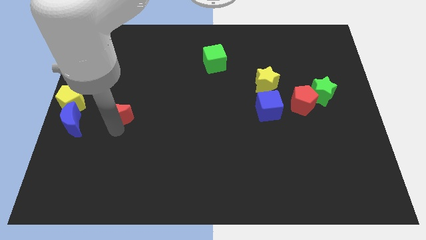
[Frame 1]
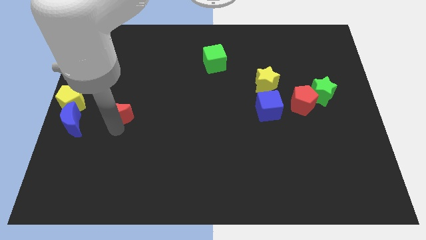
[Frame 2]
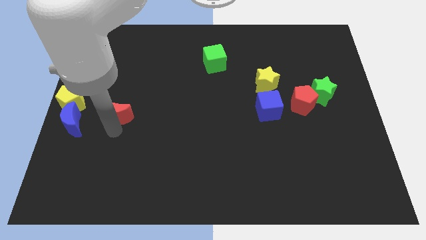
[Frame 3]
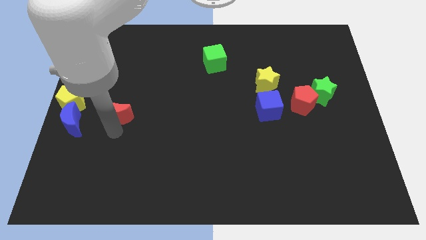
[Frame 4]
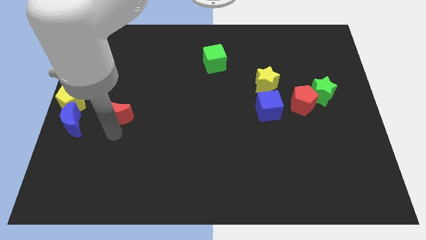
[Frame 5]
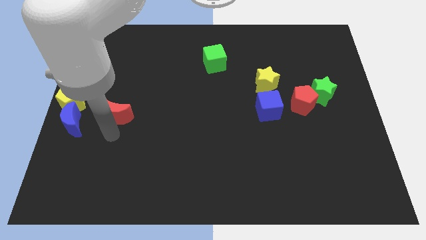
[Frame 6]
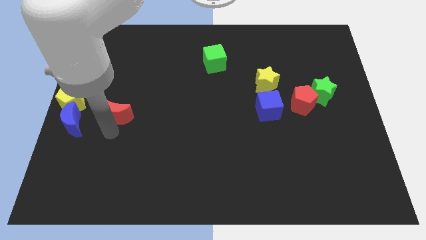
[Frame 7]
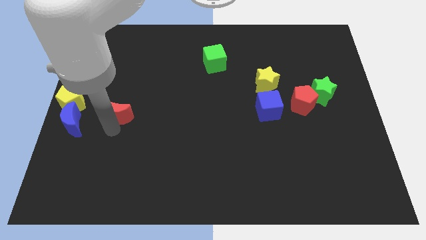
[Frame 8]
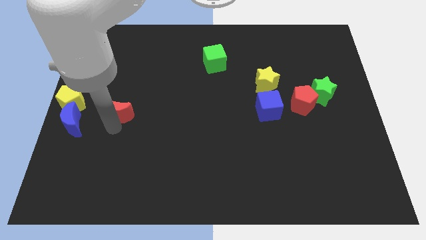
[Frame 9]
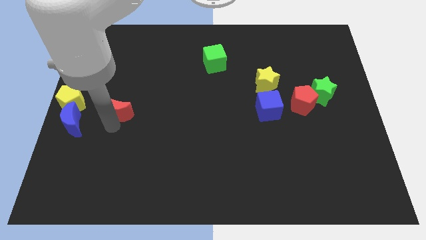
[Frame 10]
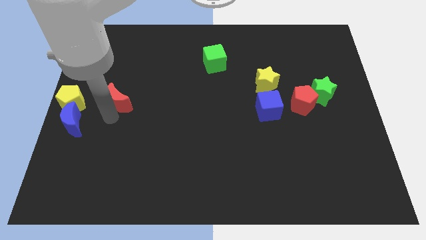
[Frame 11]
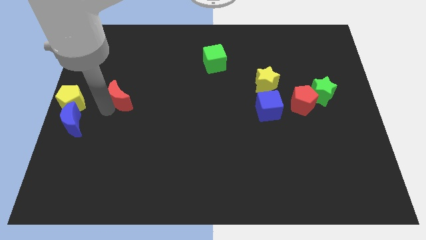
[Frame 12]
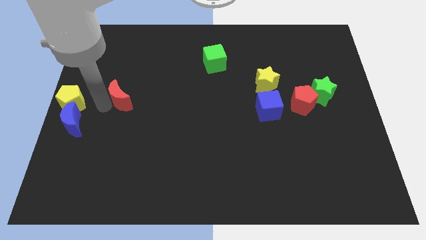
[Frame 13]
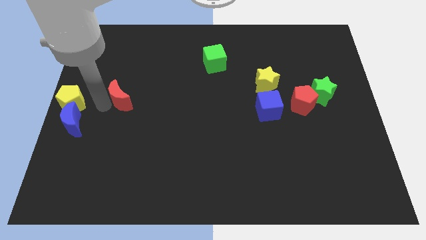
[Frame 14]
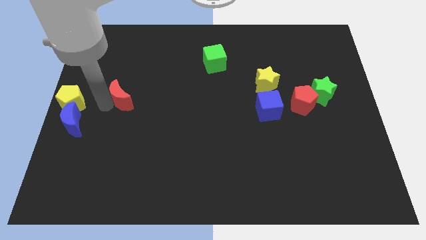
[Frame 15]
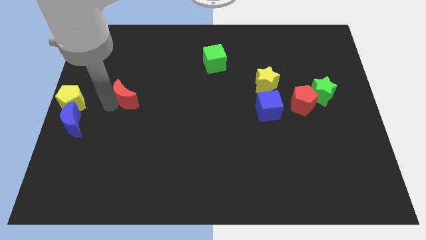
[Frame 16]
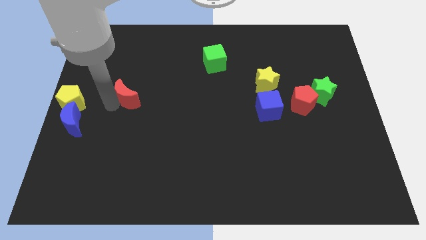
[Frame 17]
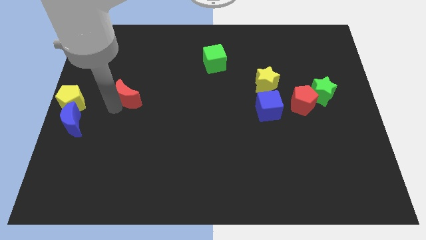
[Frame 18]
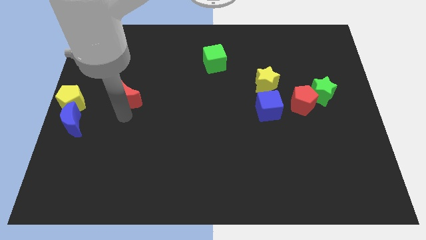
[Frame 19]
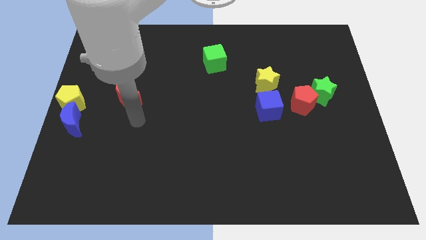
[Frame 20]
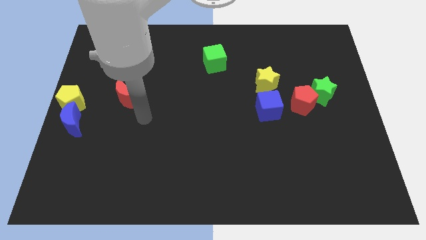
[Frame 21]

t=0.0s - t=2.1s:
push the red crescent to the right of yellow pentagon

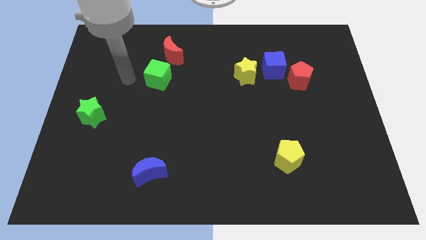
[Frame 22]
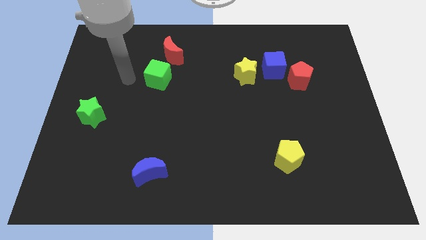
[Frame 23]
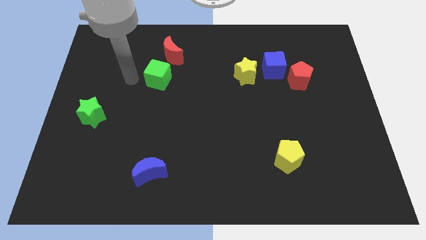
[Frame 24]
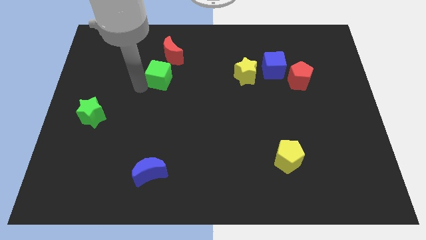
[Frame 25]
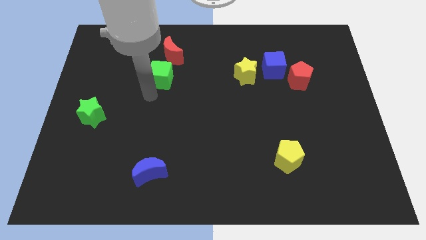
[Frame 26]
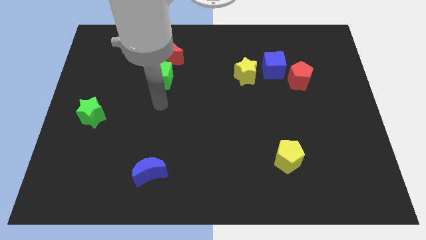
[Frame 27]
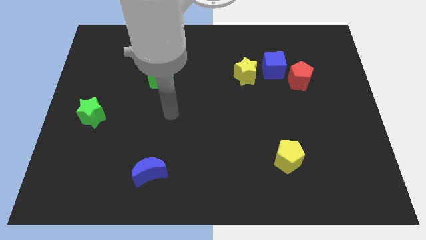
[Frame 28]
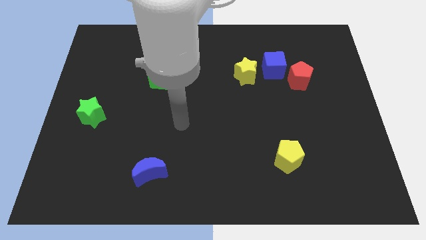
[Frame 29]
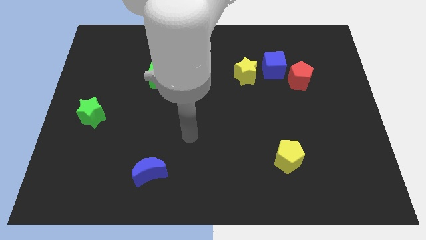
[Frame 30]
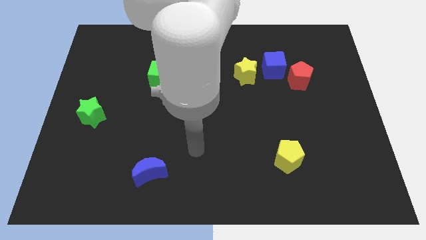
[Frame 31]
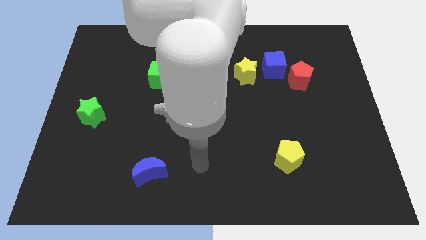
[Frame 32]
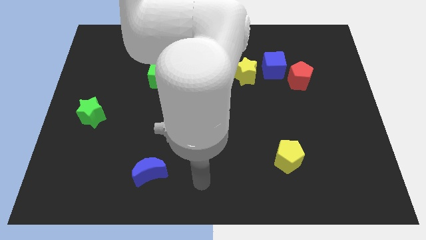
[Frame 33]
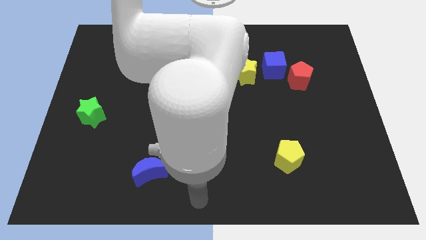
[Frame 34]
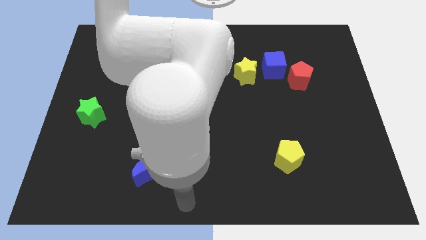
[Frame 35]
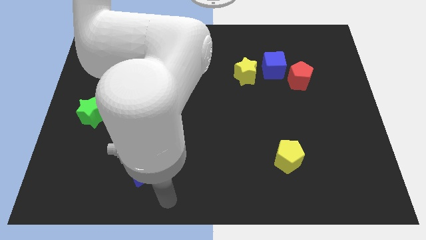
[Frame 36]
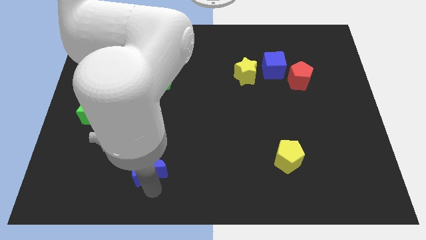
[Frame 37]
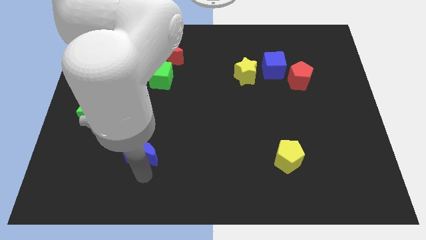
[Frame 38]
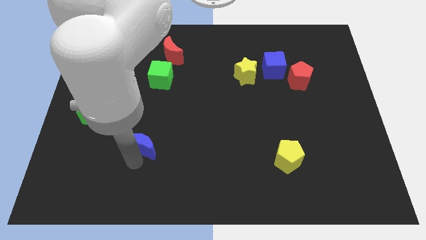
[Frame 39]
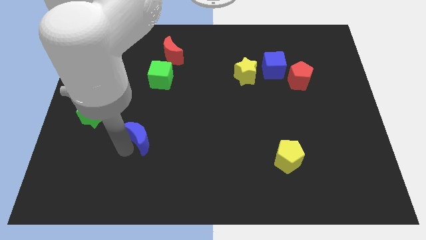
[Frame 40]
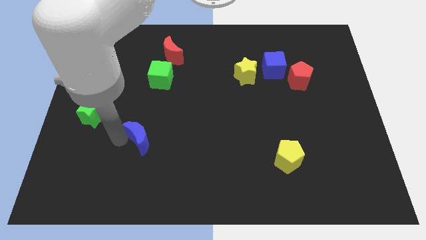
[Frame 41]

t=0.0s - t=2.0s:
move the blue moon below the green cube

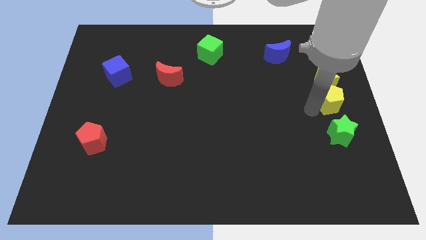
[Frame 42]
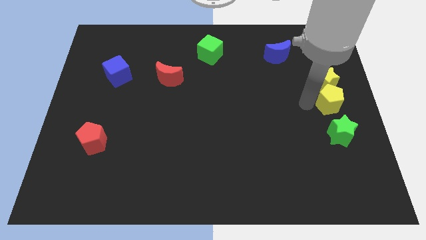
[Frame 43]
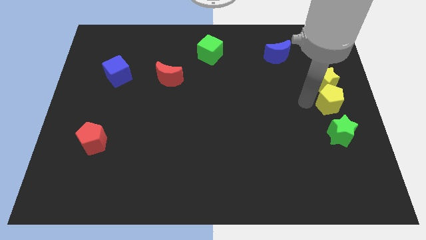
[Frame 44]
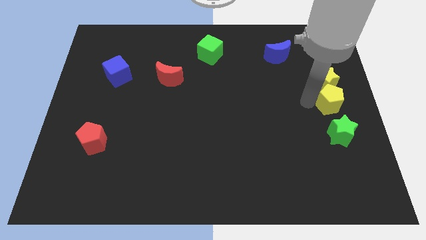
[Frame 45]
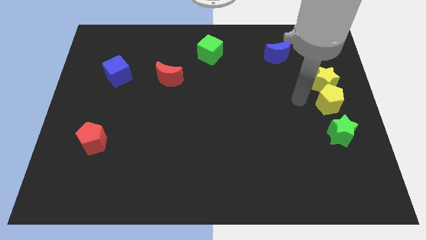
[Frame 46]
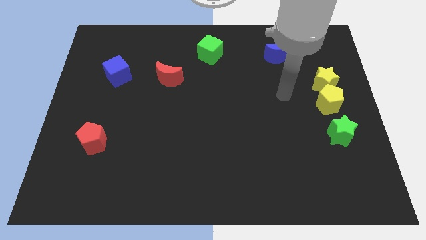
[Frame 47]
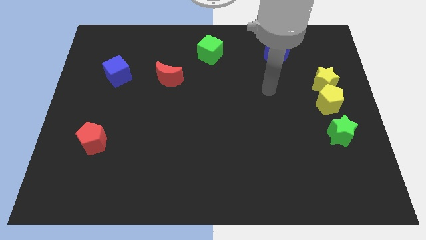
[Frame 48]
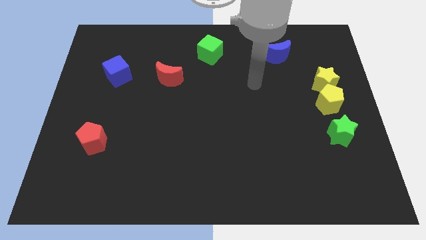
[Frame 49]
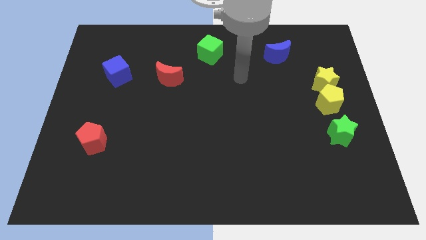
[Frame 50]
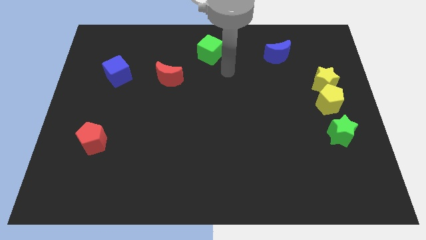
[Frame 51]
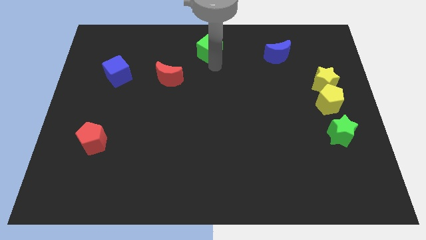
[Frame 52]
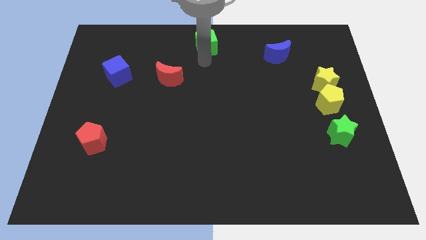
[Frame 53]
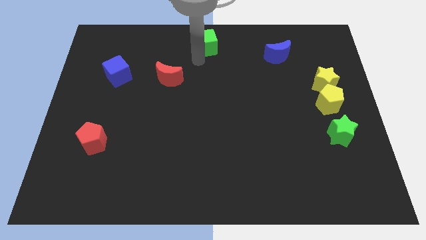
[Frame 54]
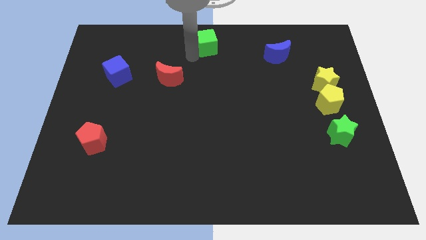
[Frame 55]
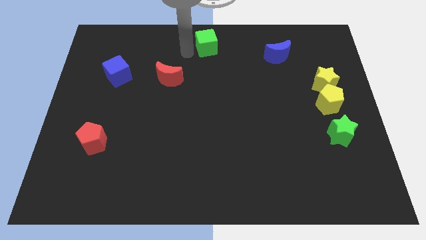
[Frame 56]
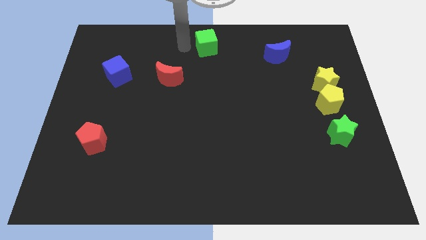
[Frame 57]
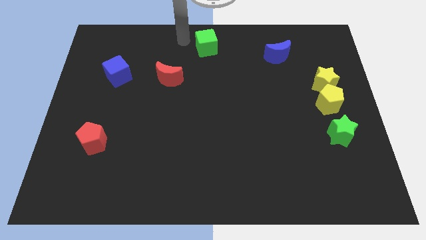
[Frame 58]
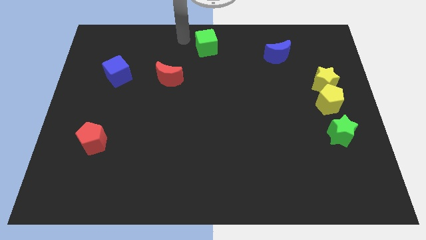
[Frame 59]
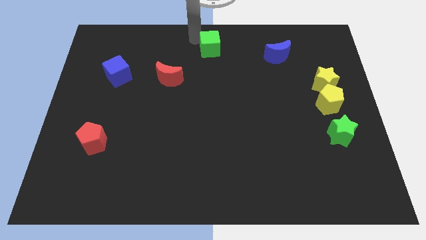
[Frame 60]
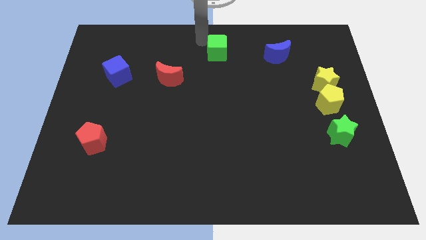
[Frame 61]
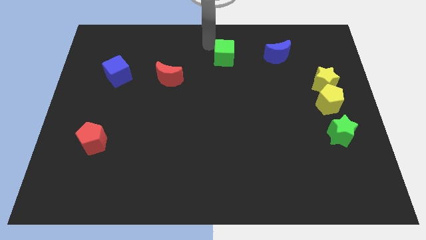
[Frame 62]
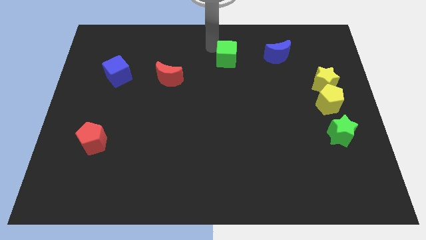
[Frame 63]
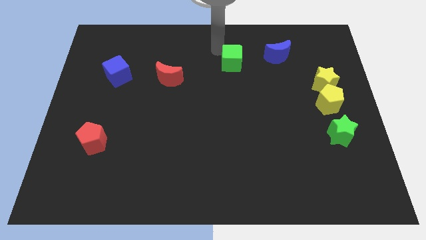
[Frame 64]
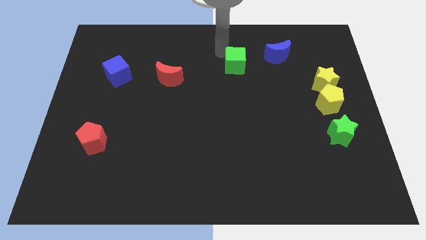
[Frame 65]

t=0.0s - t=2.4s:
push green cube slightly

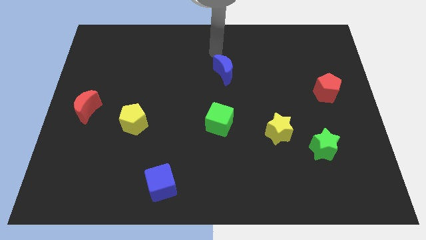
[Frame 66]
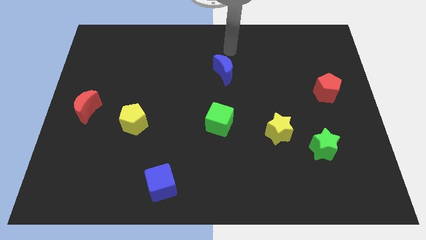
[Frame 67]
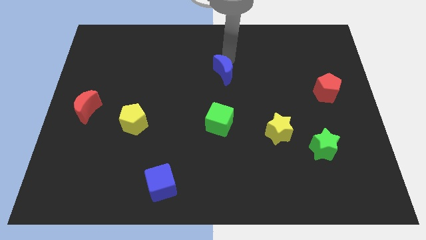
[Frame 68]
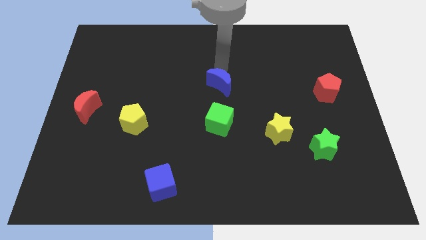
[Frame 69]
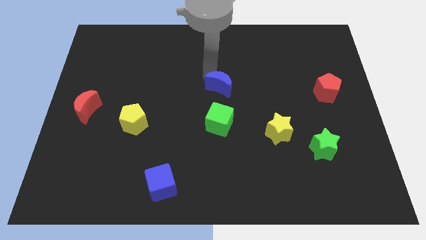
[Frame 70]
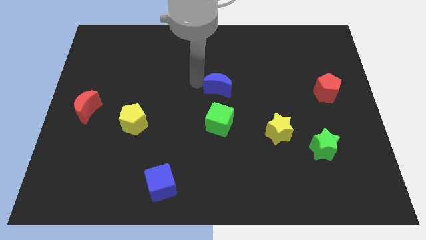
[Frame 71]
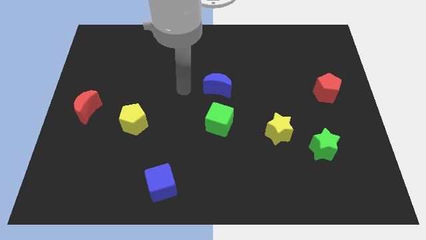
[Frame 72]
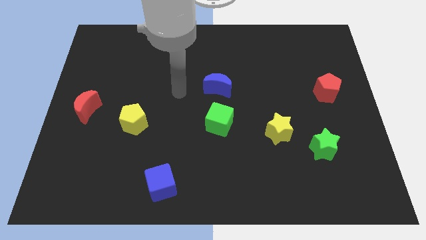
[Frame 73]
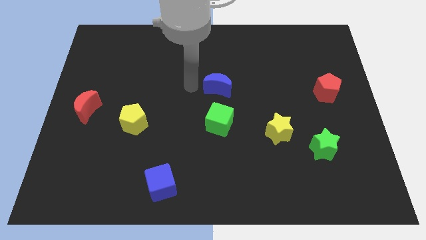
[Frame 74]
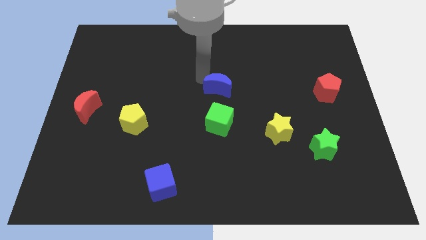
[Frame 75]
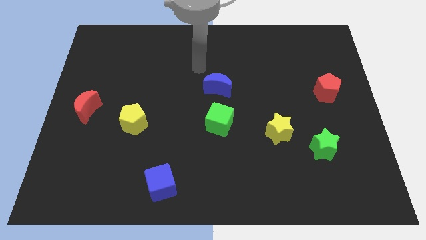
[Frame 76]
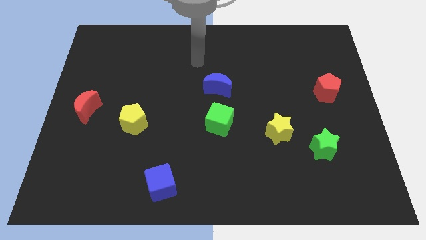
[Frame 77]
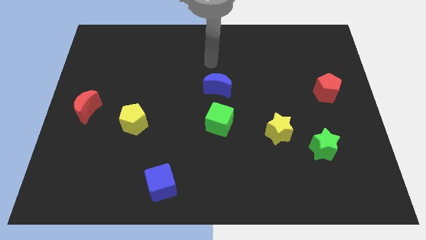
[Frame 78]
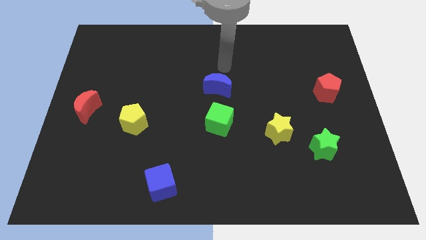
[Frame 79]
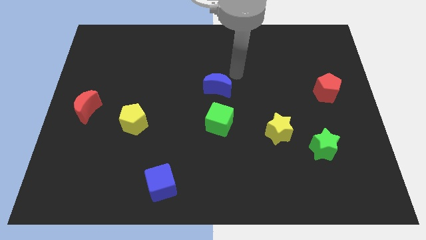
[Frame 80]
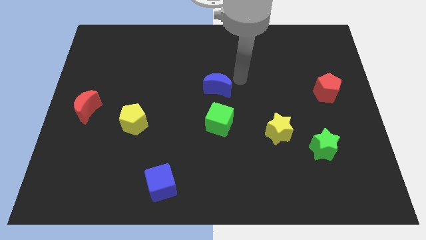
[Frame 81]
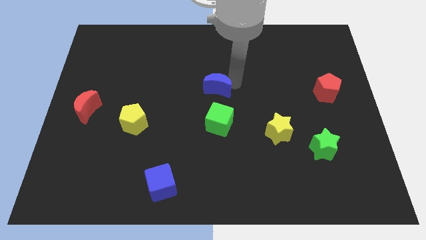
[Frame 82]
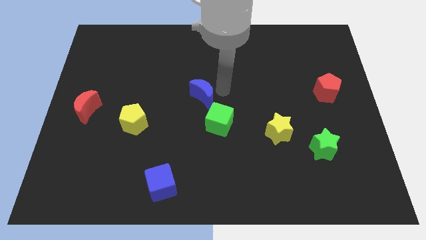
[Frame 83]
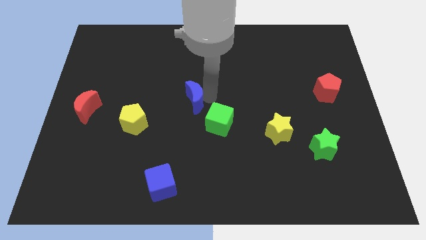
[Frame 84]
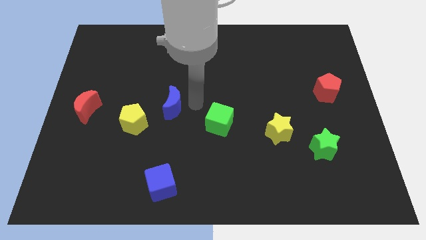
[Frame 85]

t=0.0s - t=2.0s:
push the blue crescent towards the left center of the board

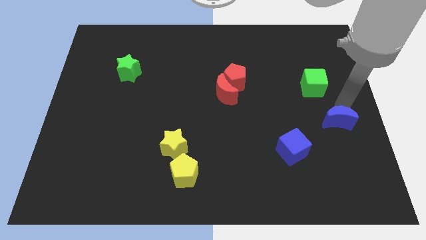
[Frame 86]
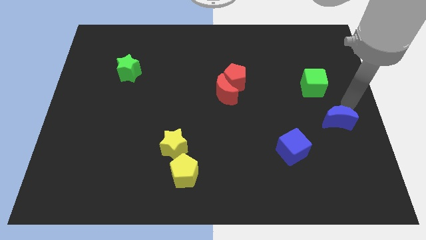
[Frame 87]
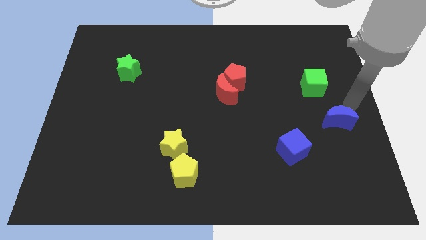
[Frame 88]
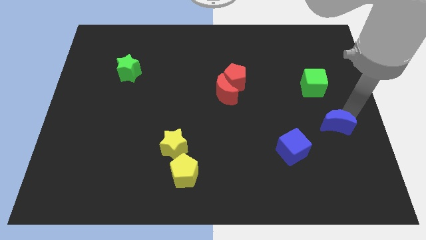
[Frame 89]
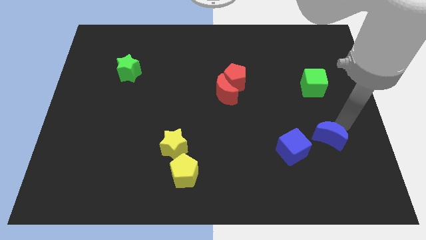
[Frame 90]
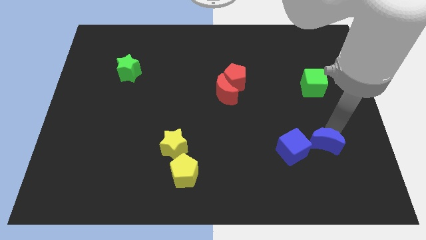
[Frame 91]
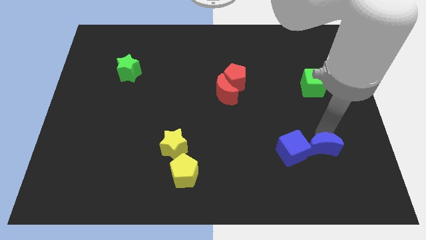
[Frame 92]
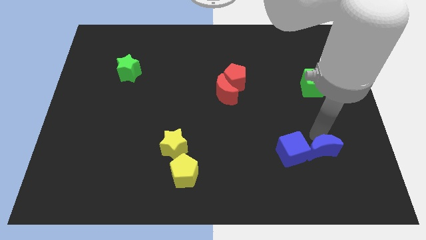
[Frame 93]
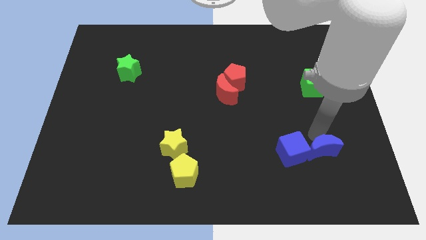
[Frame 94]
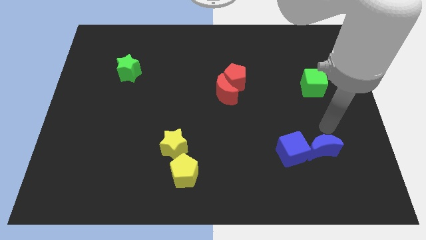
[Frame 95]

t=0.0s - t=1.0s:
make the blue crescent to touch the blue cube
